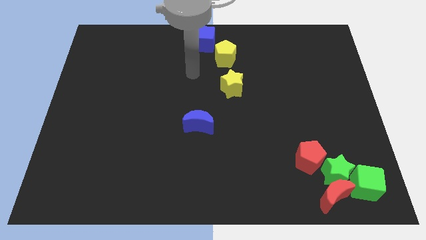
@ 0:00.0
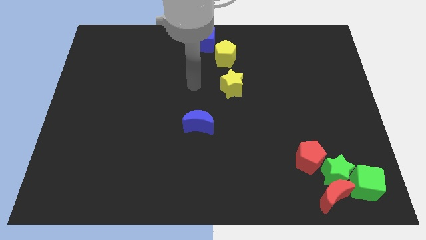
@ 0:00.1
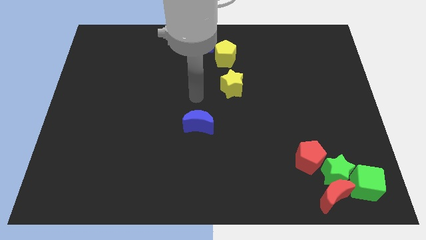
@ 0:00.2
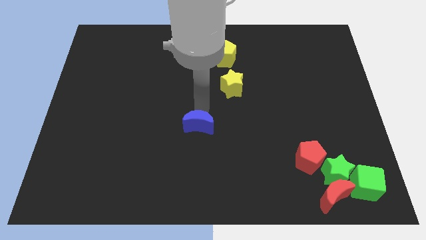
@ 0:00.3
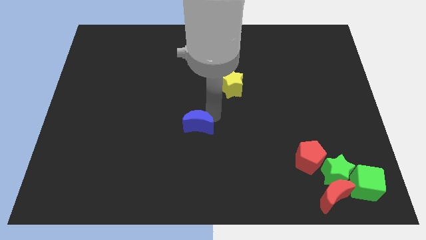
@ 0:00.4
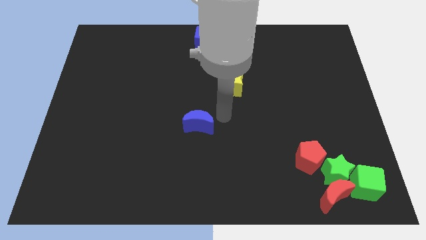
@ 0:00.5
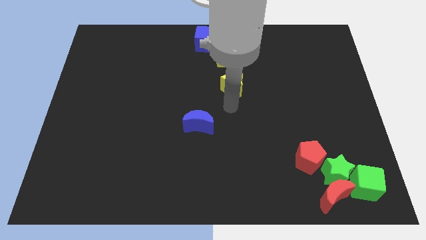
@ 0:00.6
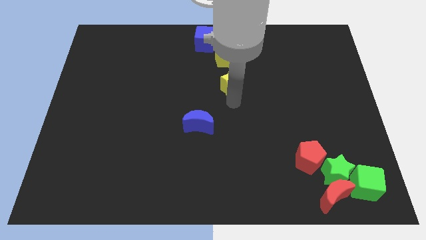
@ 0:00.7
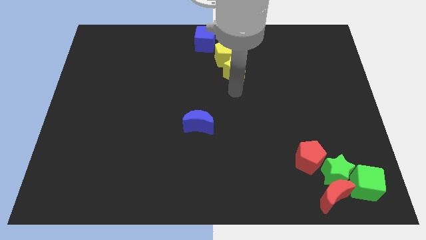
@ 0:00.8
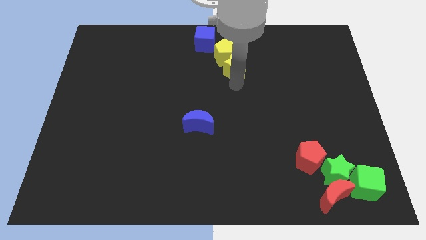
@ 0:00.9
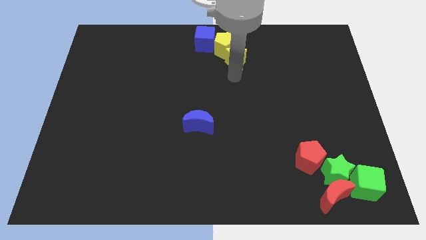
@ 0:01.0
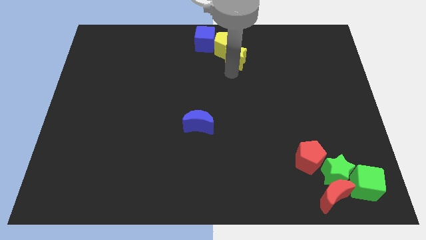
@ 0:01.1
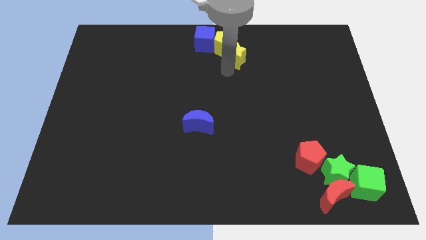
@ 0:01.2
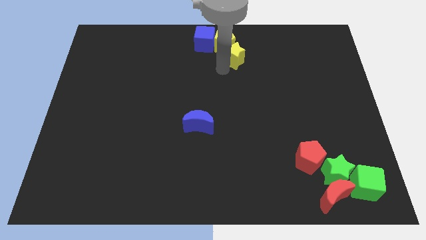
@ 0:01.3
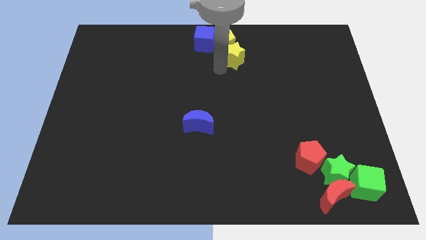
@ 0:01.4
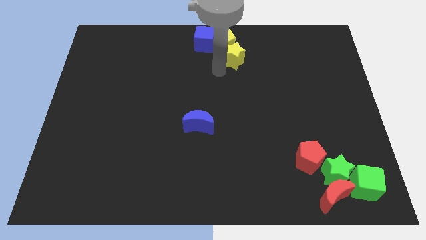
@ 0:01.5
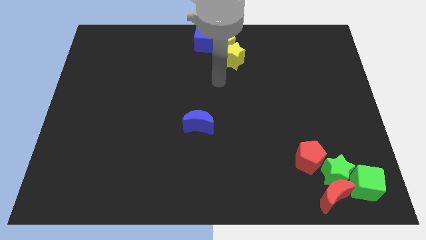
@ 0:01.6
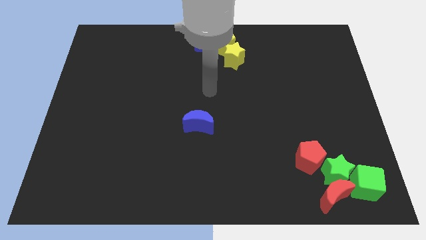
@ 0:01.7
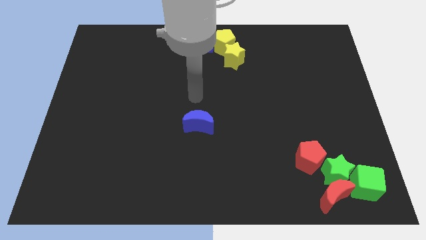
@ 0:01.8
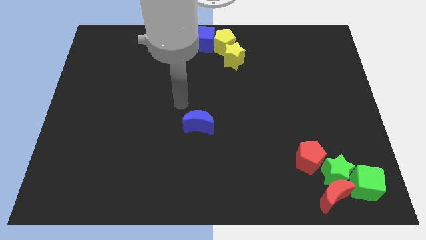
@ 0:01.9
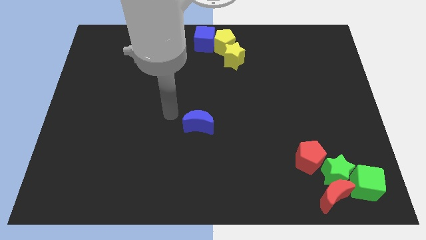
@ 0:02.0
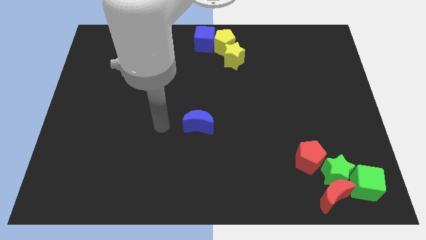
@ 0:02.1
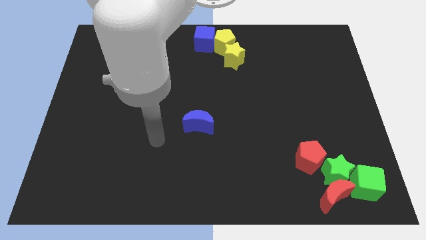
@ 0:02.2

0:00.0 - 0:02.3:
move the yellow star and yellow pentagon towards the top of the board

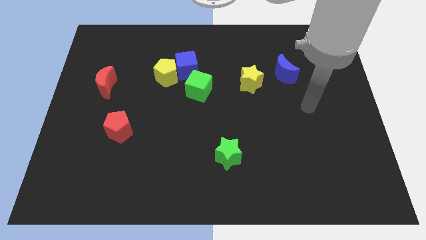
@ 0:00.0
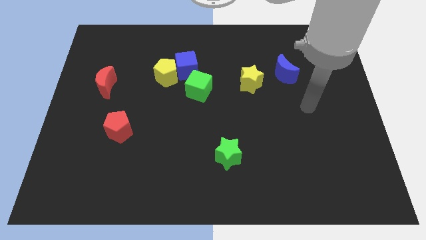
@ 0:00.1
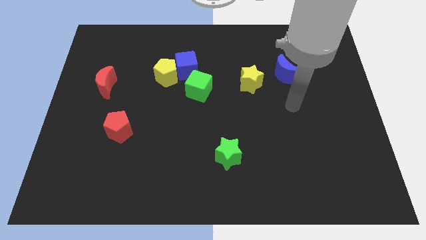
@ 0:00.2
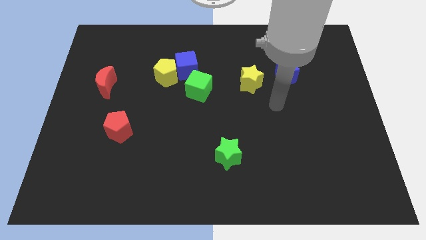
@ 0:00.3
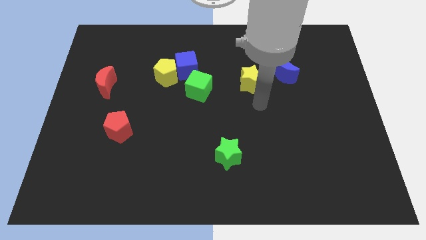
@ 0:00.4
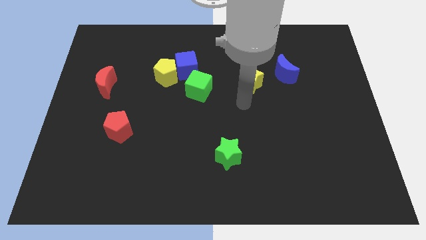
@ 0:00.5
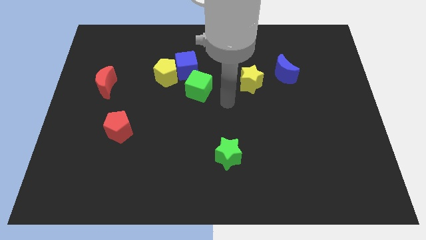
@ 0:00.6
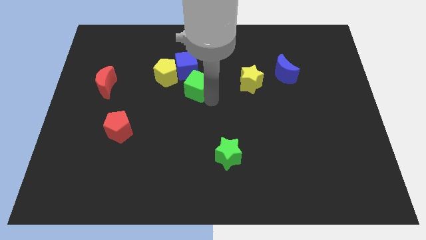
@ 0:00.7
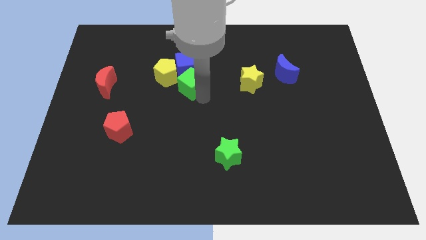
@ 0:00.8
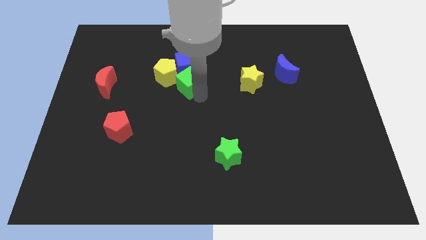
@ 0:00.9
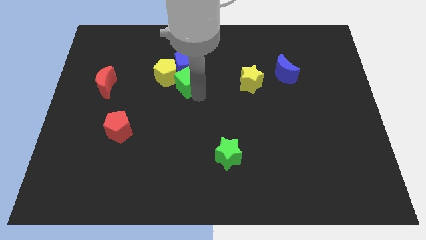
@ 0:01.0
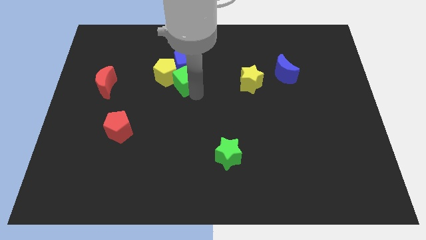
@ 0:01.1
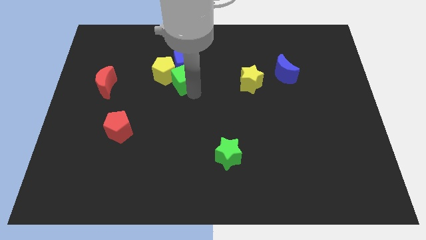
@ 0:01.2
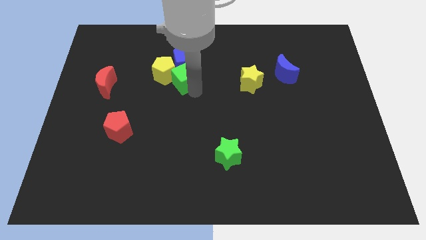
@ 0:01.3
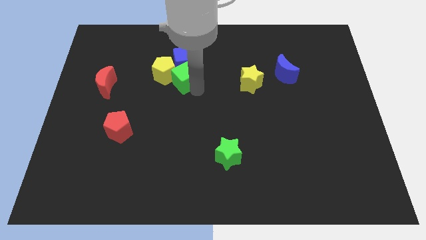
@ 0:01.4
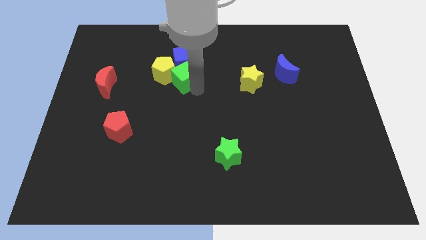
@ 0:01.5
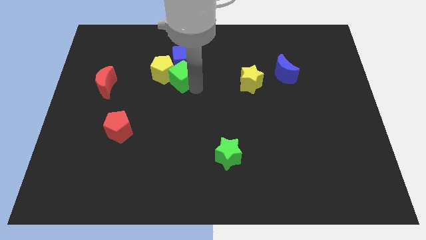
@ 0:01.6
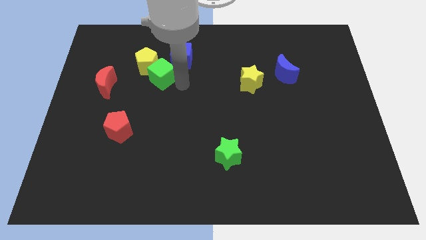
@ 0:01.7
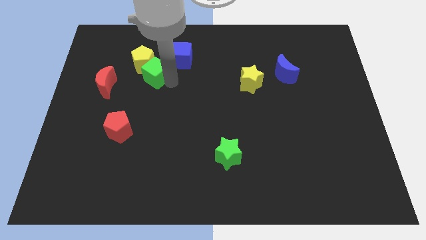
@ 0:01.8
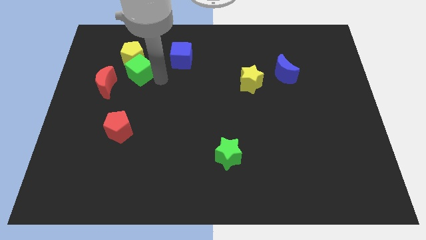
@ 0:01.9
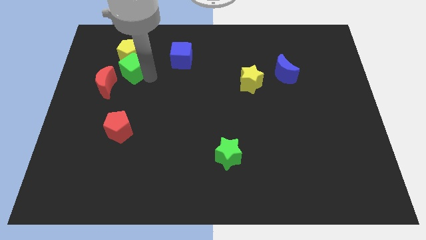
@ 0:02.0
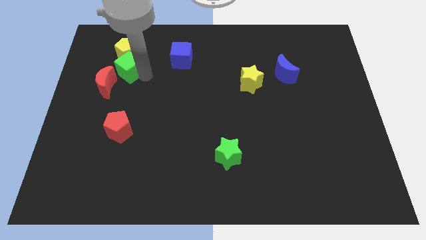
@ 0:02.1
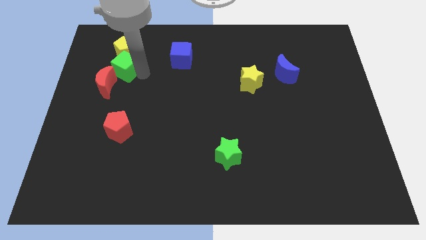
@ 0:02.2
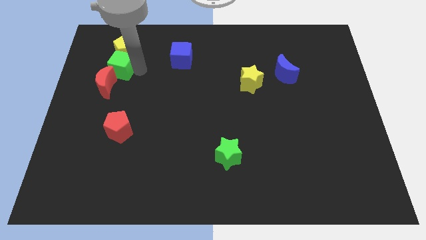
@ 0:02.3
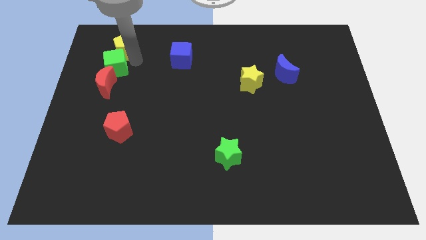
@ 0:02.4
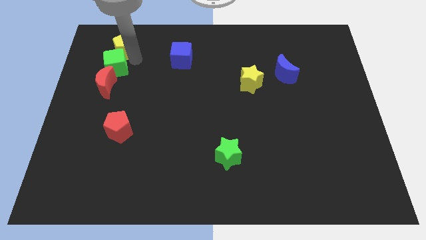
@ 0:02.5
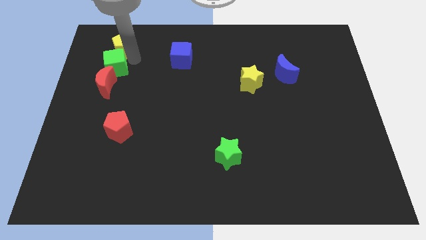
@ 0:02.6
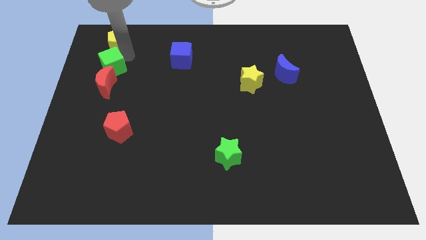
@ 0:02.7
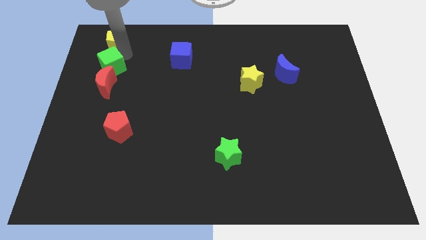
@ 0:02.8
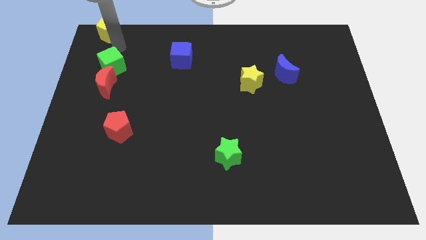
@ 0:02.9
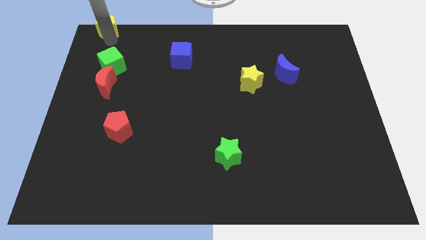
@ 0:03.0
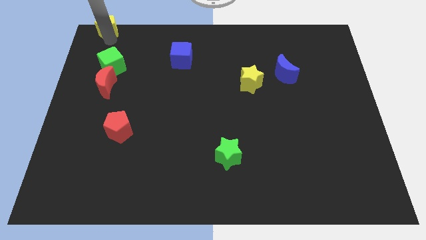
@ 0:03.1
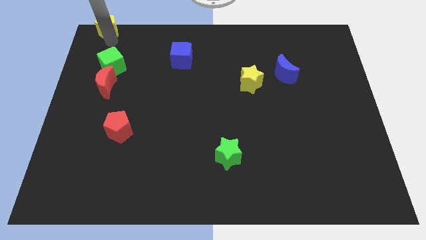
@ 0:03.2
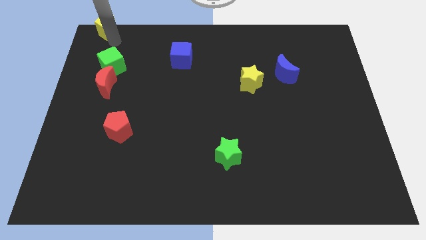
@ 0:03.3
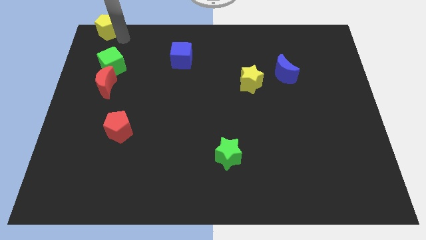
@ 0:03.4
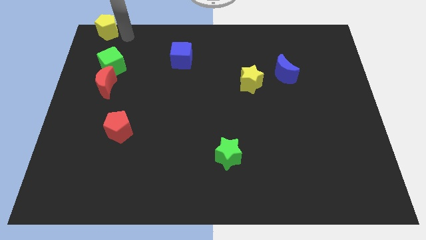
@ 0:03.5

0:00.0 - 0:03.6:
move the green cube and yellow pentagon to the top left side of the board

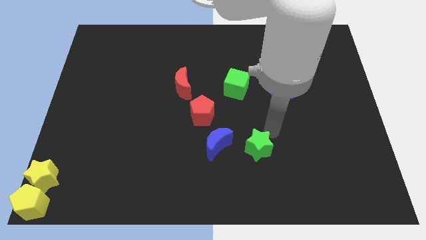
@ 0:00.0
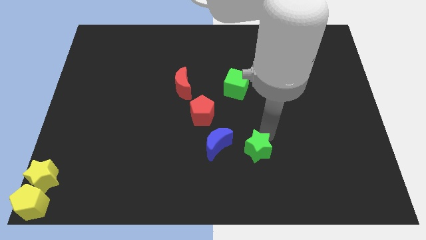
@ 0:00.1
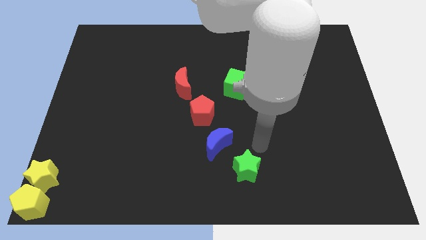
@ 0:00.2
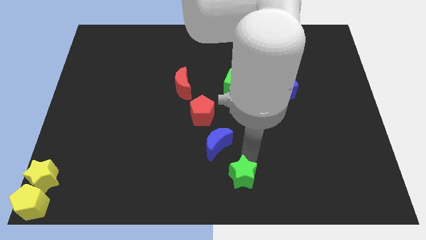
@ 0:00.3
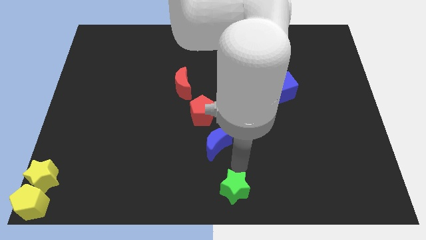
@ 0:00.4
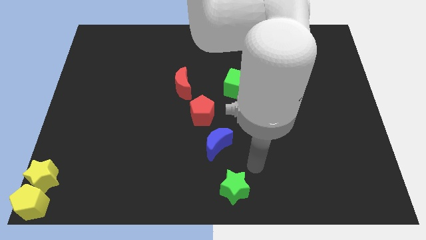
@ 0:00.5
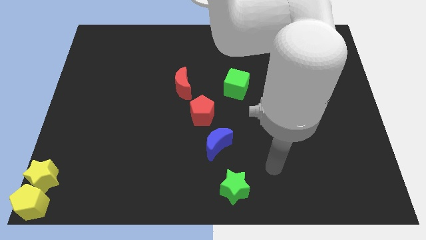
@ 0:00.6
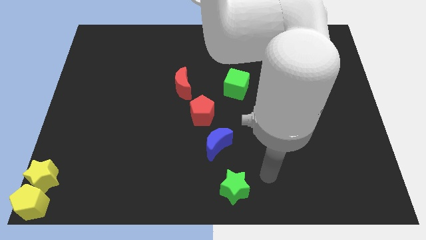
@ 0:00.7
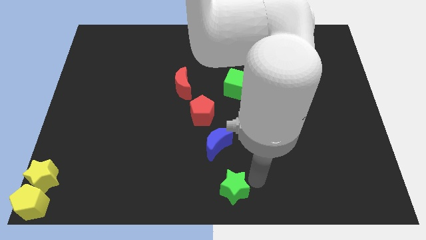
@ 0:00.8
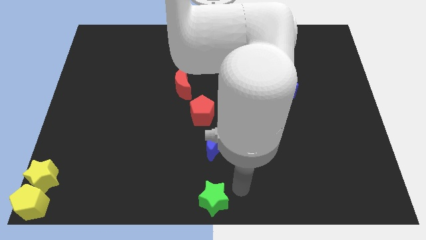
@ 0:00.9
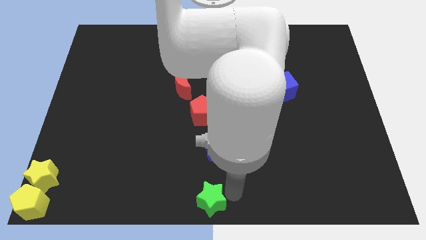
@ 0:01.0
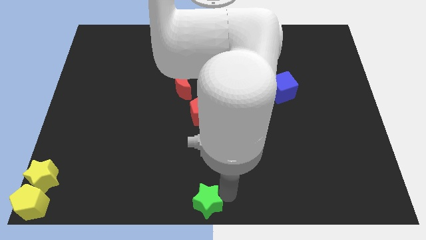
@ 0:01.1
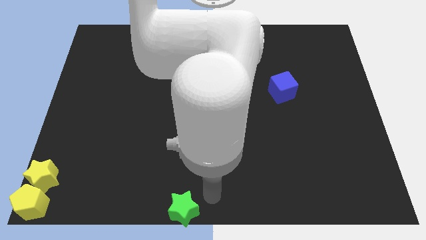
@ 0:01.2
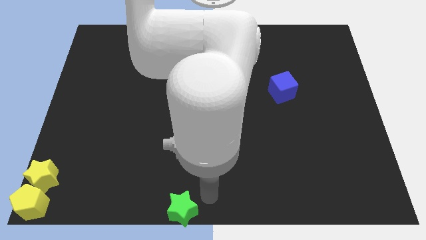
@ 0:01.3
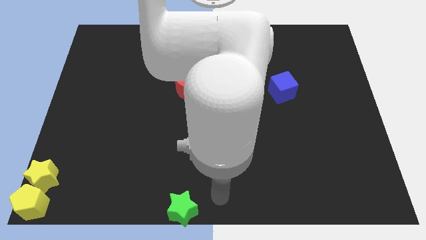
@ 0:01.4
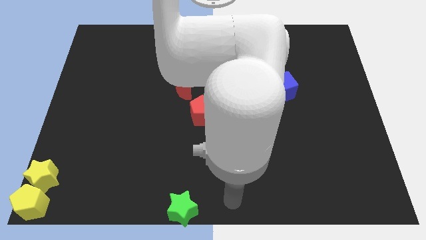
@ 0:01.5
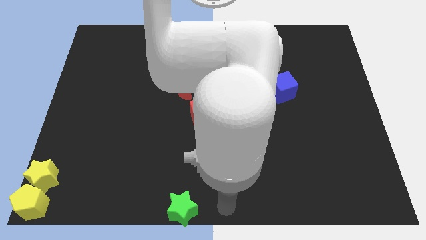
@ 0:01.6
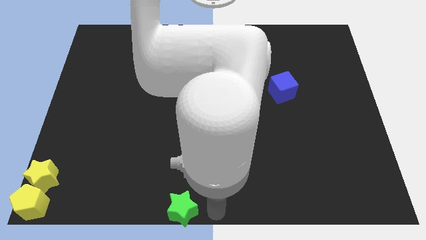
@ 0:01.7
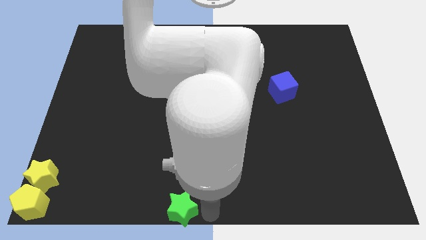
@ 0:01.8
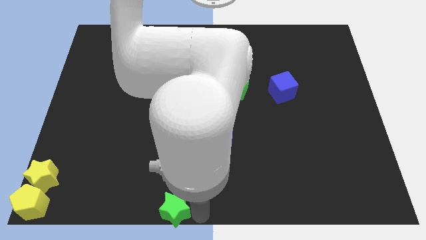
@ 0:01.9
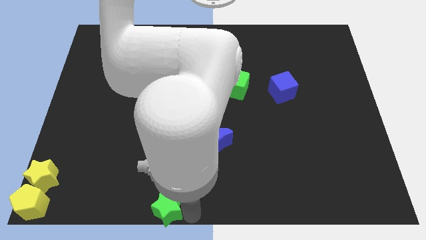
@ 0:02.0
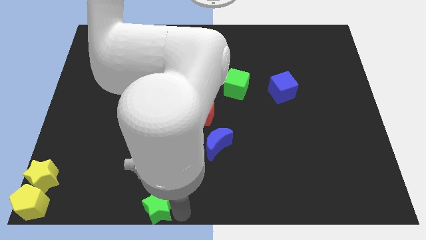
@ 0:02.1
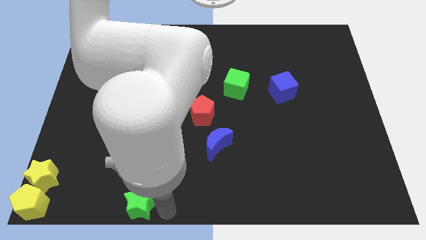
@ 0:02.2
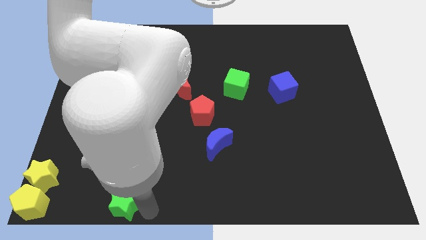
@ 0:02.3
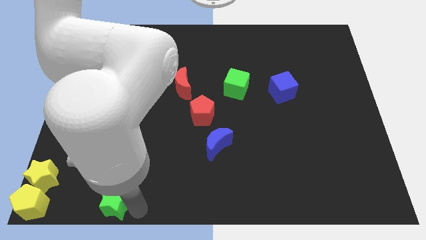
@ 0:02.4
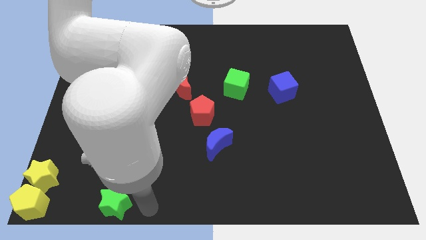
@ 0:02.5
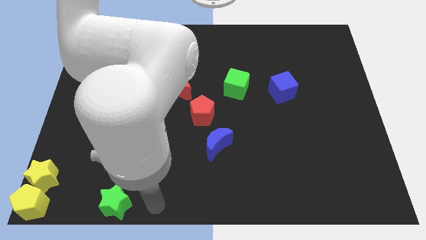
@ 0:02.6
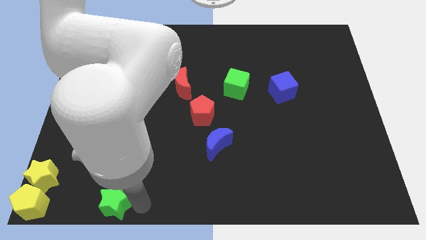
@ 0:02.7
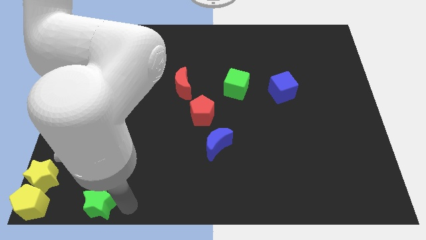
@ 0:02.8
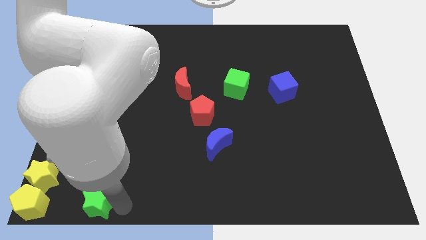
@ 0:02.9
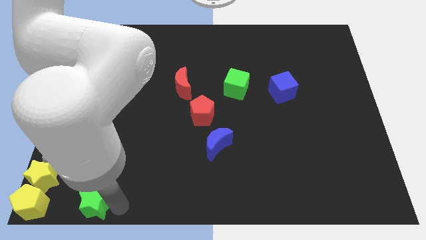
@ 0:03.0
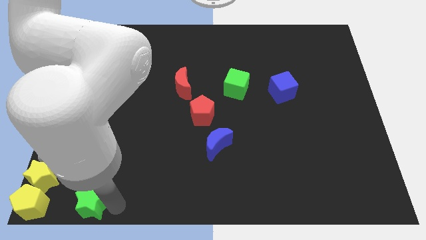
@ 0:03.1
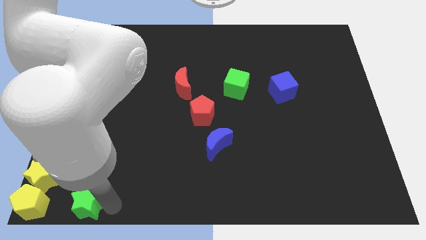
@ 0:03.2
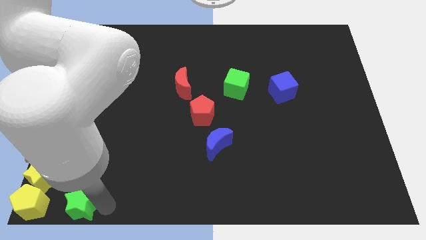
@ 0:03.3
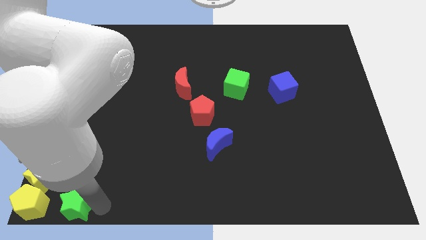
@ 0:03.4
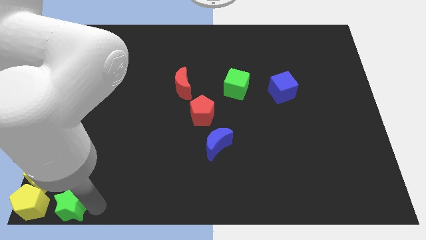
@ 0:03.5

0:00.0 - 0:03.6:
place the green star to the right of the yellow pentagon
